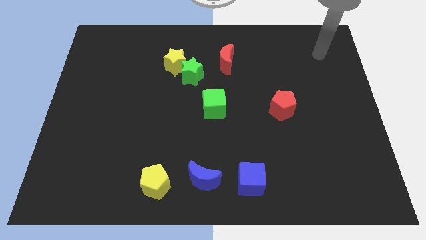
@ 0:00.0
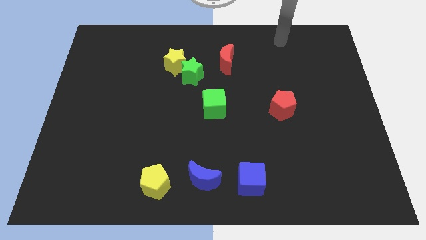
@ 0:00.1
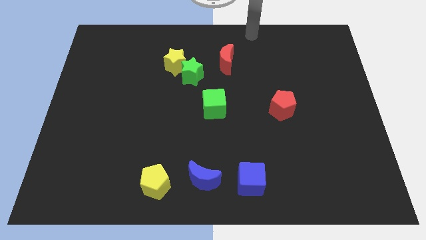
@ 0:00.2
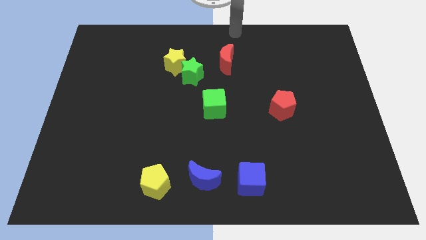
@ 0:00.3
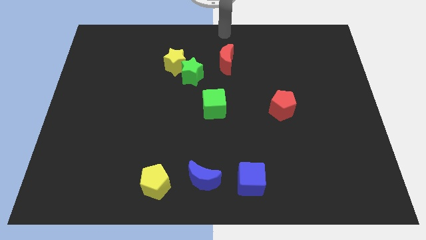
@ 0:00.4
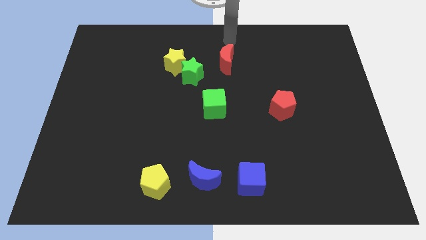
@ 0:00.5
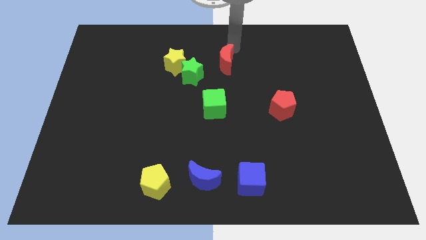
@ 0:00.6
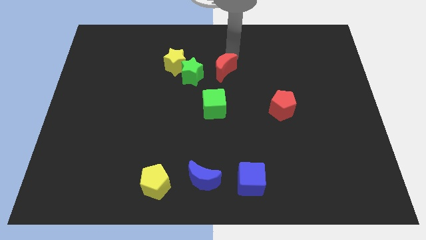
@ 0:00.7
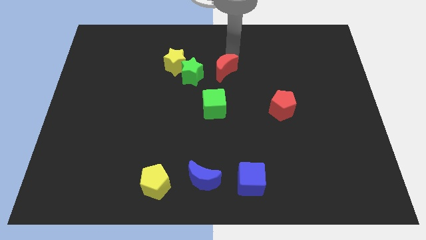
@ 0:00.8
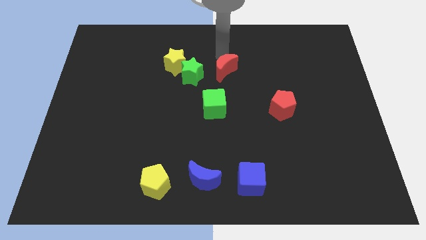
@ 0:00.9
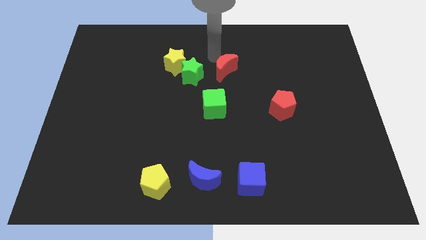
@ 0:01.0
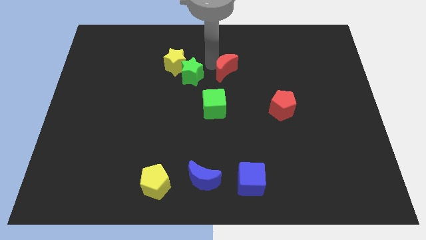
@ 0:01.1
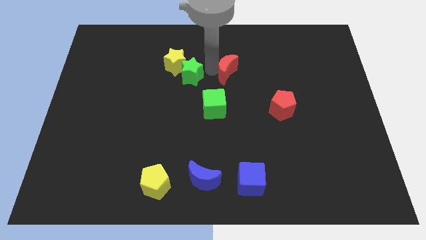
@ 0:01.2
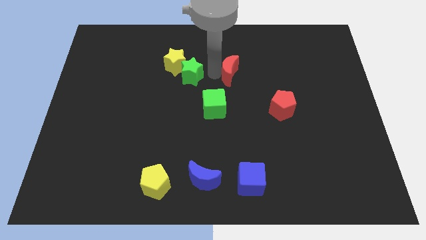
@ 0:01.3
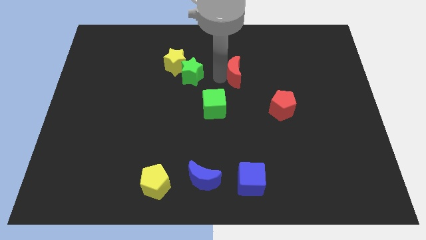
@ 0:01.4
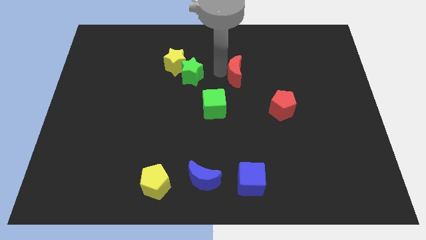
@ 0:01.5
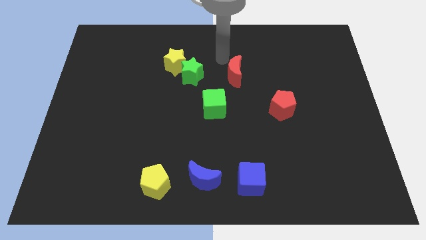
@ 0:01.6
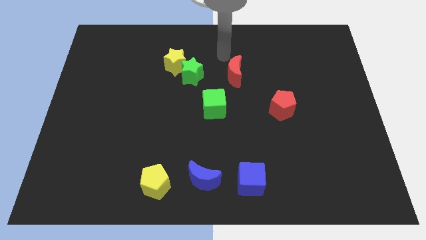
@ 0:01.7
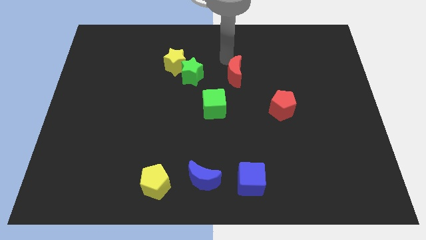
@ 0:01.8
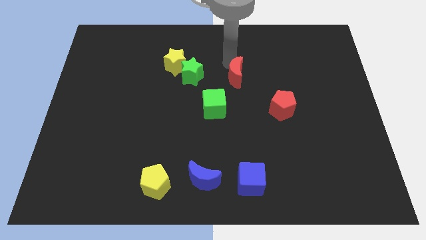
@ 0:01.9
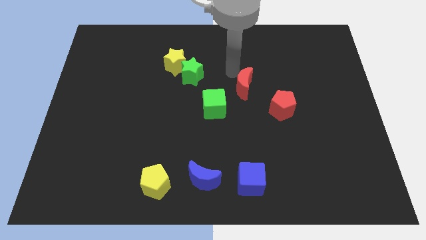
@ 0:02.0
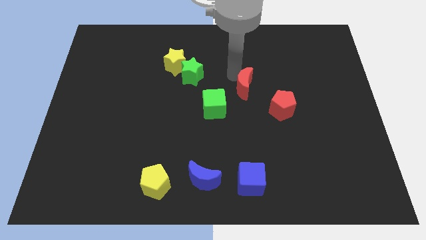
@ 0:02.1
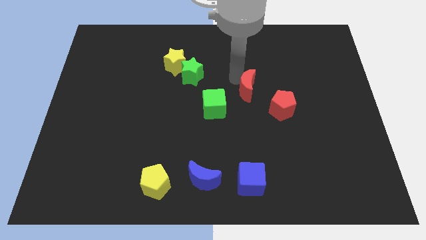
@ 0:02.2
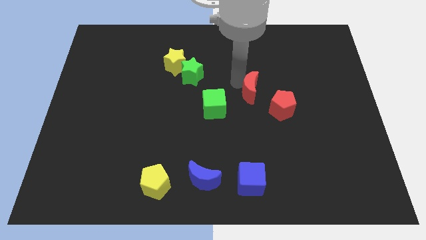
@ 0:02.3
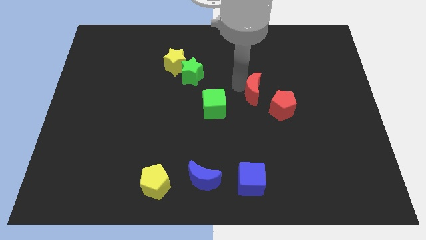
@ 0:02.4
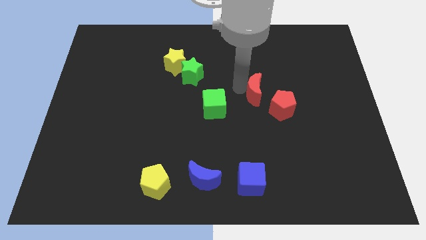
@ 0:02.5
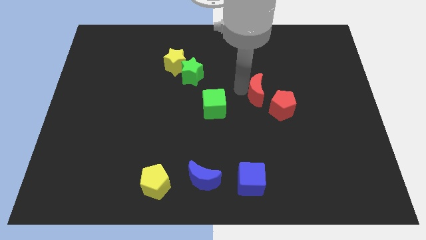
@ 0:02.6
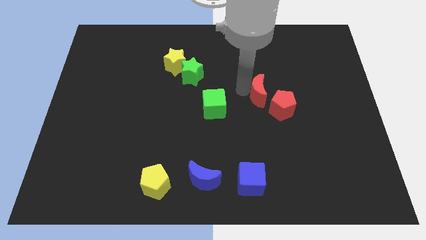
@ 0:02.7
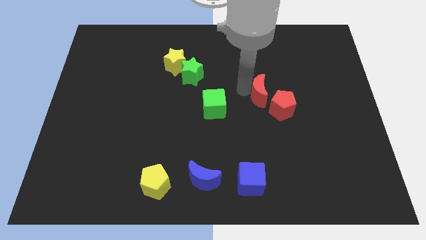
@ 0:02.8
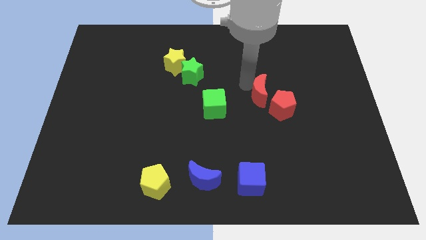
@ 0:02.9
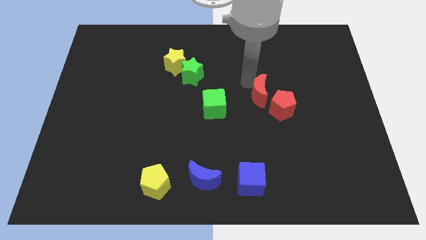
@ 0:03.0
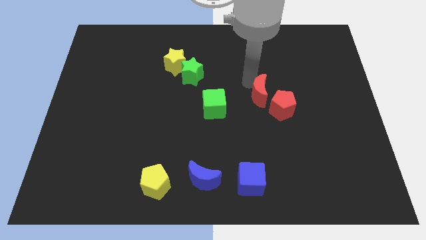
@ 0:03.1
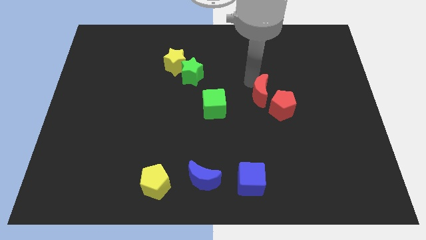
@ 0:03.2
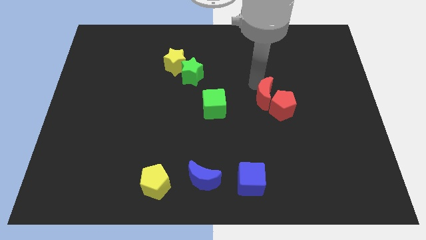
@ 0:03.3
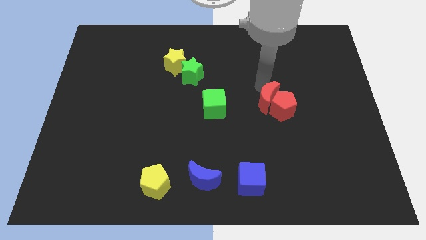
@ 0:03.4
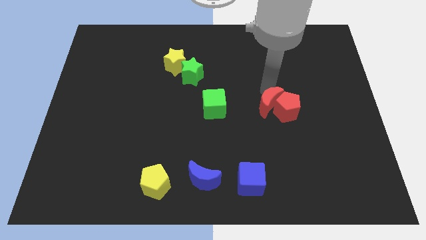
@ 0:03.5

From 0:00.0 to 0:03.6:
move the red moon close to the red pentagon

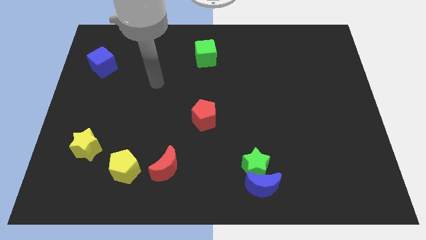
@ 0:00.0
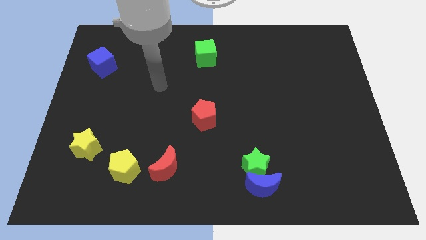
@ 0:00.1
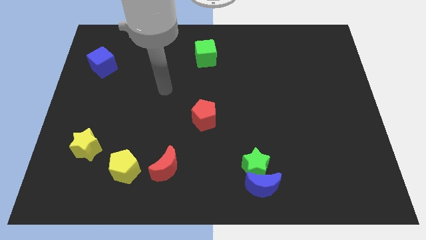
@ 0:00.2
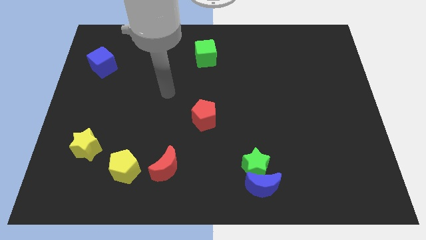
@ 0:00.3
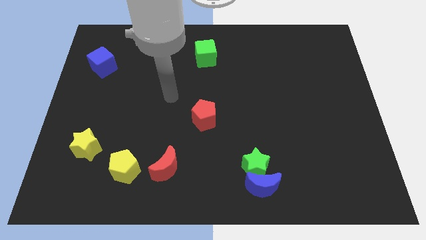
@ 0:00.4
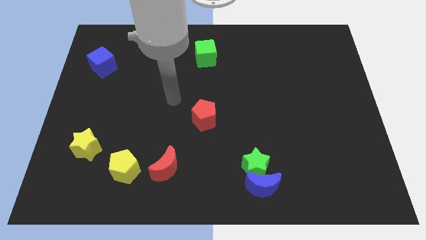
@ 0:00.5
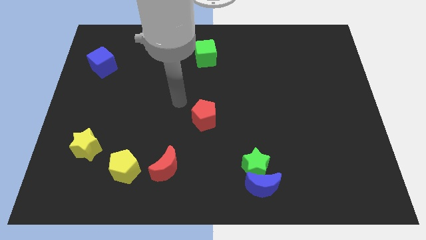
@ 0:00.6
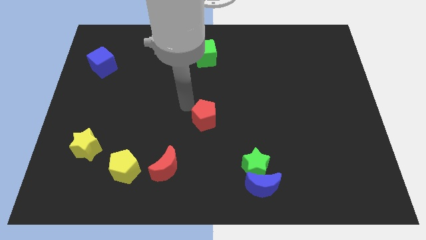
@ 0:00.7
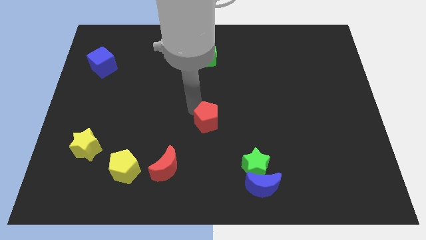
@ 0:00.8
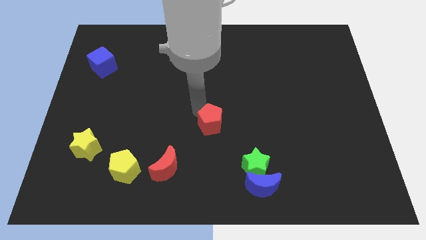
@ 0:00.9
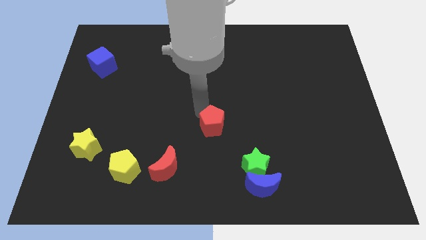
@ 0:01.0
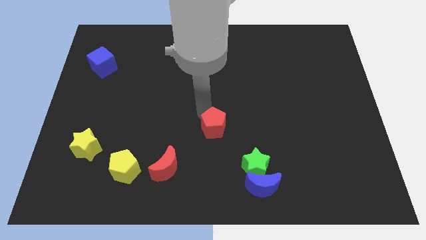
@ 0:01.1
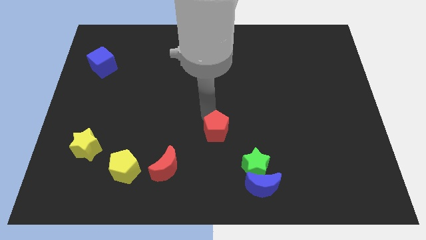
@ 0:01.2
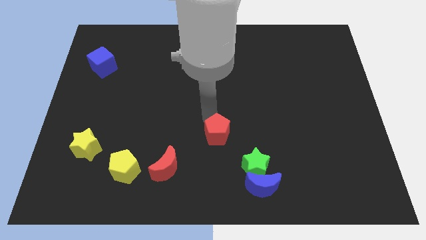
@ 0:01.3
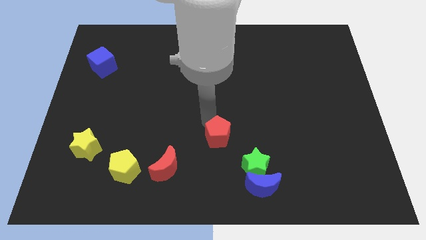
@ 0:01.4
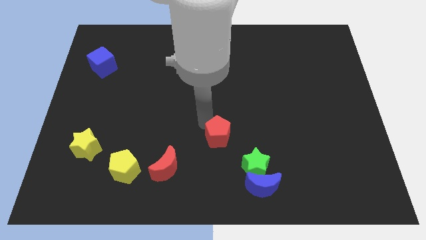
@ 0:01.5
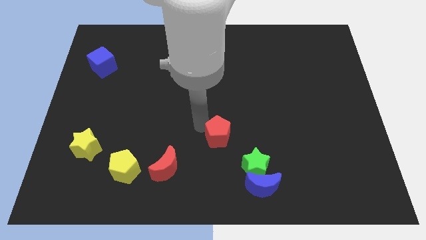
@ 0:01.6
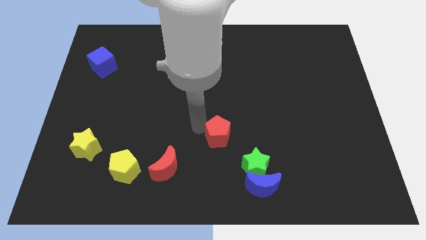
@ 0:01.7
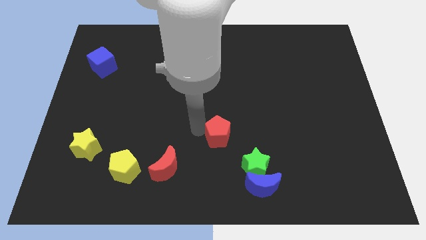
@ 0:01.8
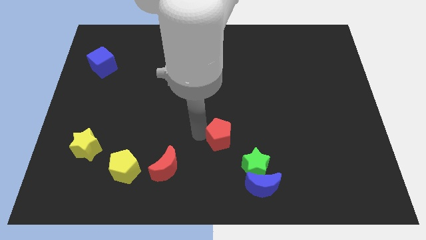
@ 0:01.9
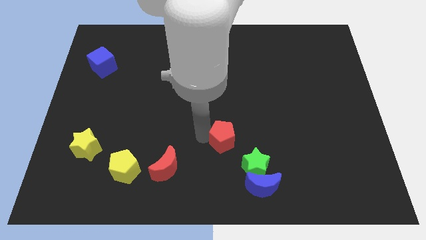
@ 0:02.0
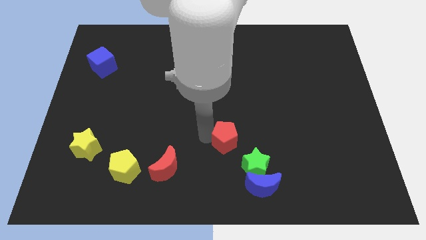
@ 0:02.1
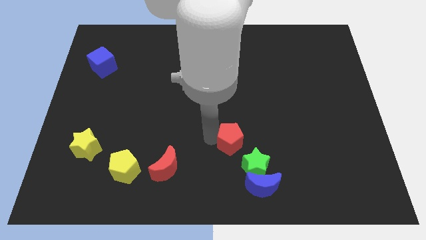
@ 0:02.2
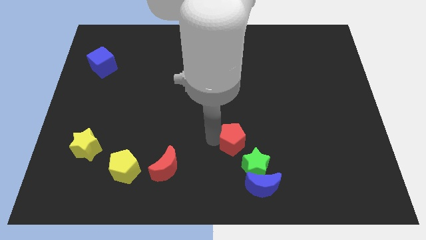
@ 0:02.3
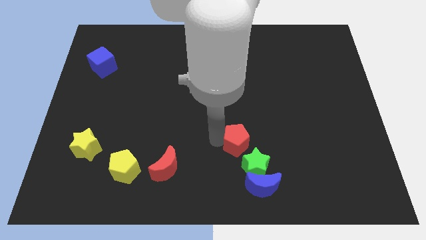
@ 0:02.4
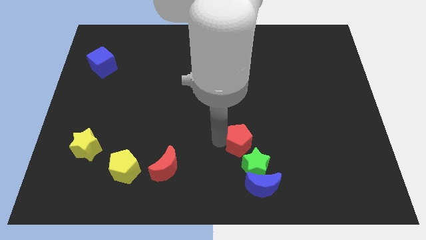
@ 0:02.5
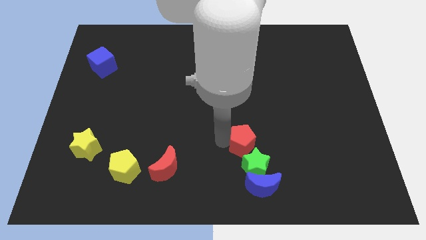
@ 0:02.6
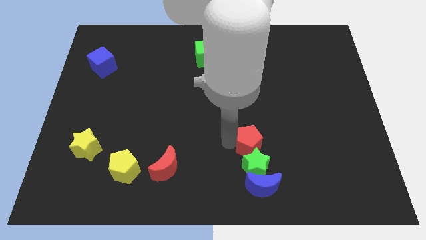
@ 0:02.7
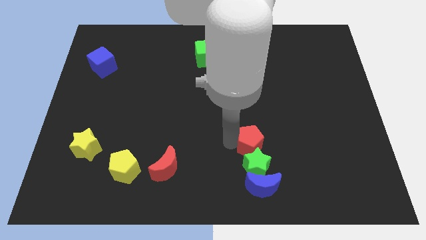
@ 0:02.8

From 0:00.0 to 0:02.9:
put the red pentagon next to the green star

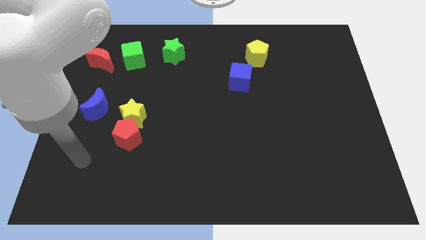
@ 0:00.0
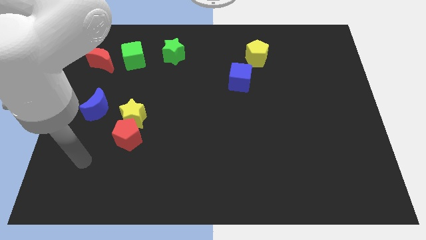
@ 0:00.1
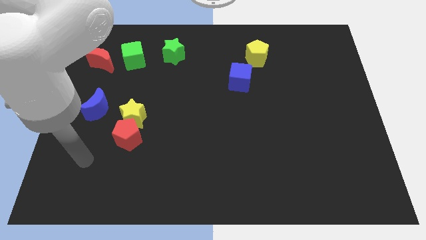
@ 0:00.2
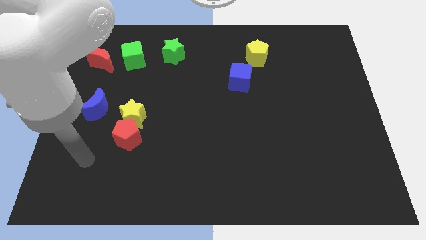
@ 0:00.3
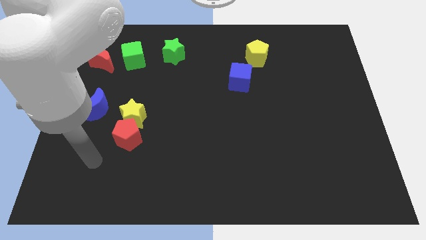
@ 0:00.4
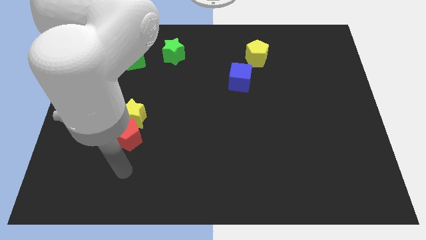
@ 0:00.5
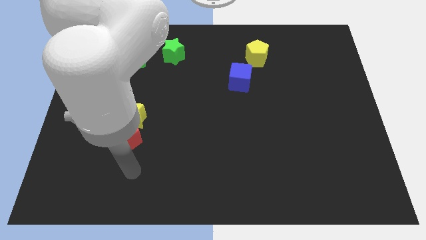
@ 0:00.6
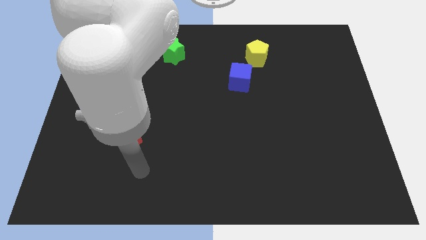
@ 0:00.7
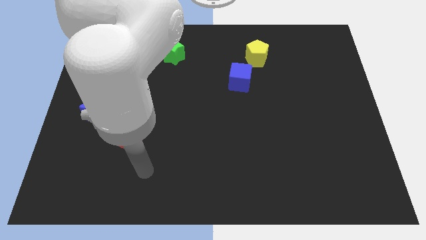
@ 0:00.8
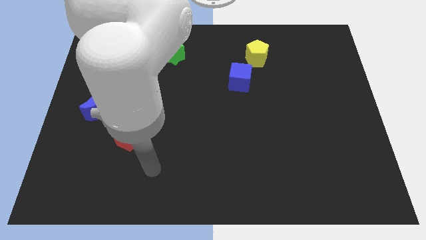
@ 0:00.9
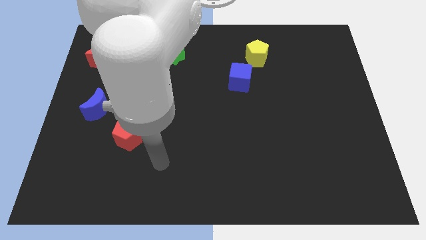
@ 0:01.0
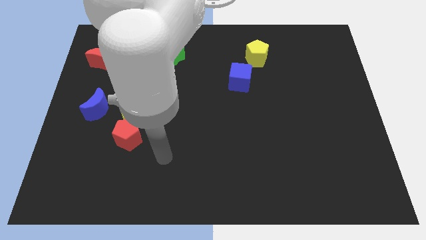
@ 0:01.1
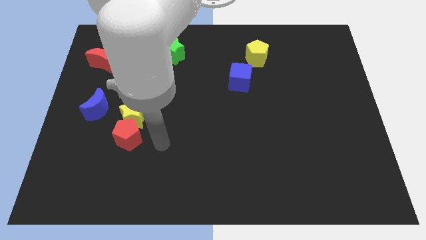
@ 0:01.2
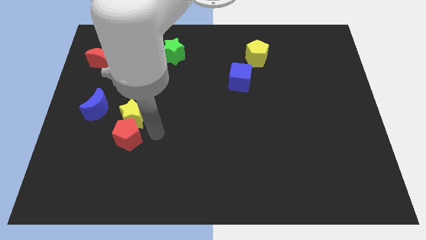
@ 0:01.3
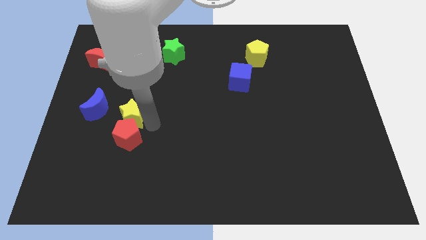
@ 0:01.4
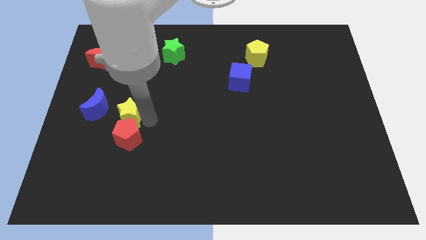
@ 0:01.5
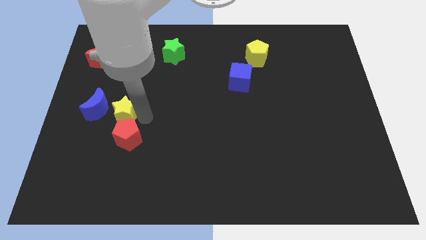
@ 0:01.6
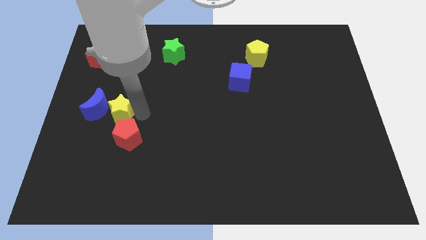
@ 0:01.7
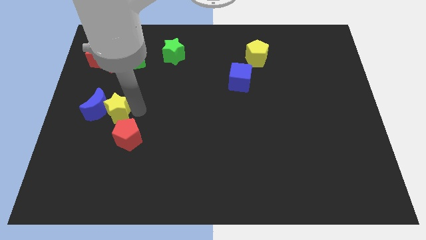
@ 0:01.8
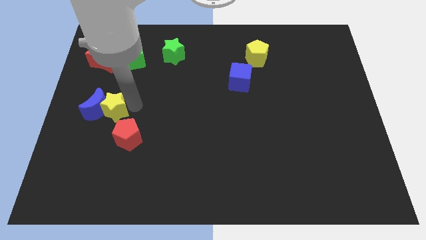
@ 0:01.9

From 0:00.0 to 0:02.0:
push the yellow star close to the blue moon
